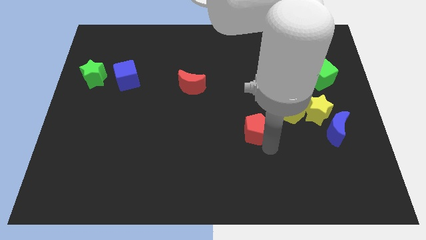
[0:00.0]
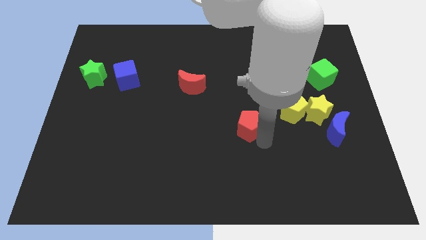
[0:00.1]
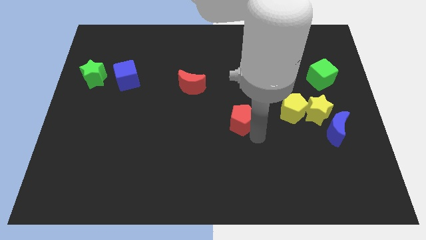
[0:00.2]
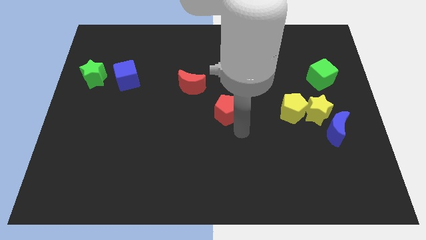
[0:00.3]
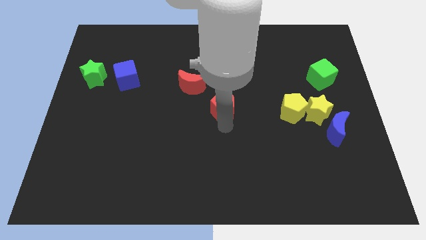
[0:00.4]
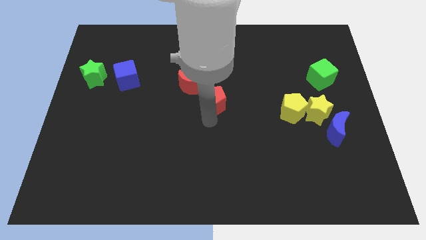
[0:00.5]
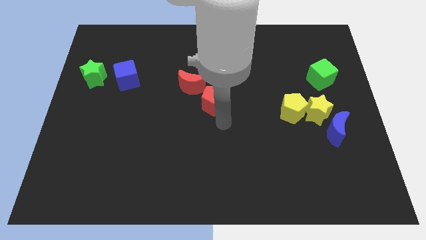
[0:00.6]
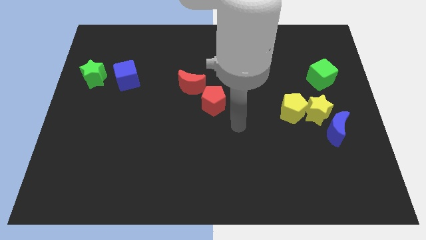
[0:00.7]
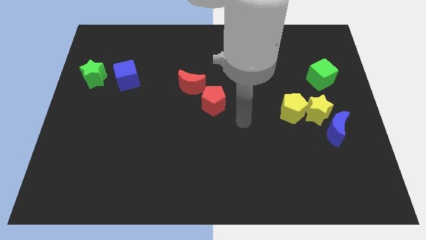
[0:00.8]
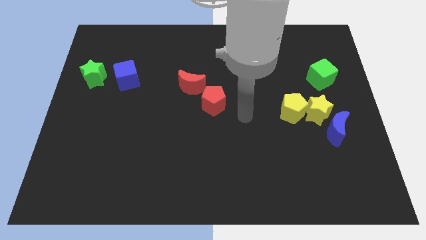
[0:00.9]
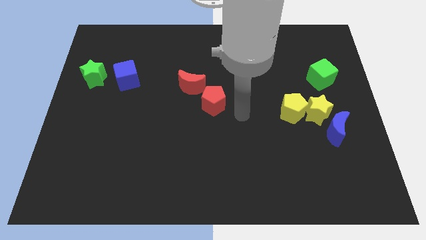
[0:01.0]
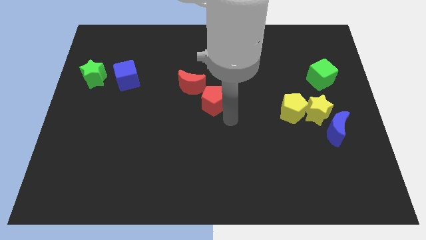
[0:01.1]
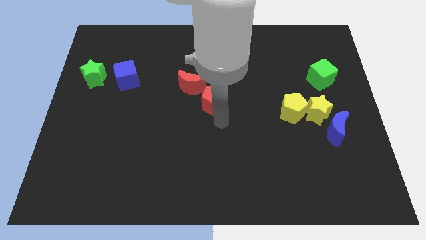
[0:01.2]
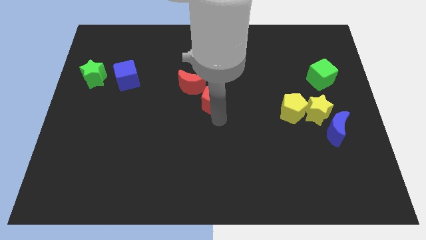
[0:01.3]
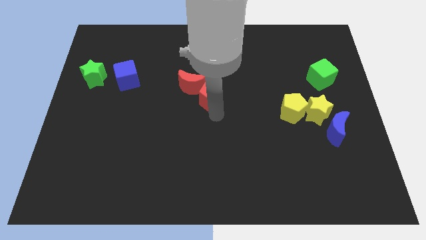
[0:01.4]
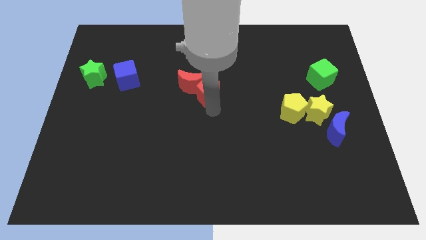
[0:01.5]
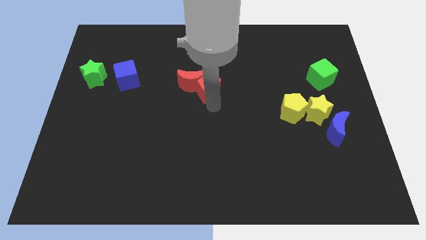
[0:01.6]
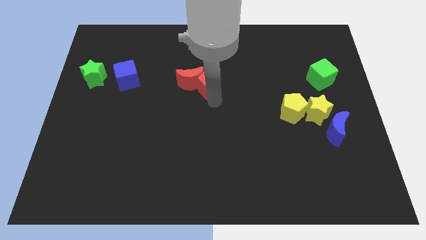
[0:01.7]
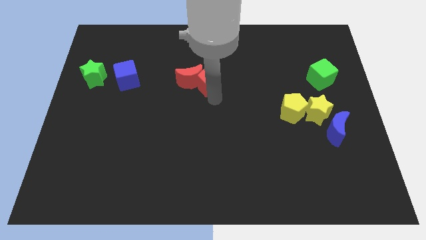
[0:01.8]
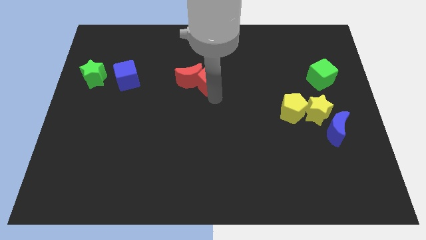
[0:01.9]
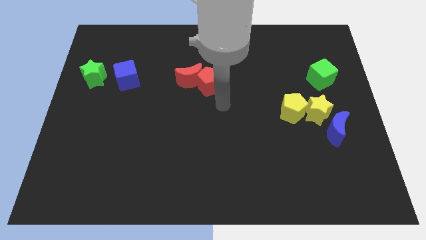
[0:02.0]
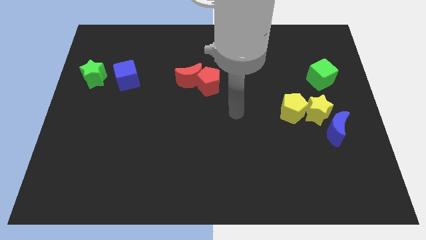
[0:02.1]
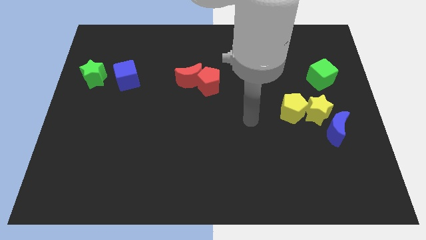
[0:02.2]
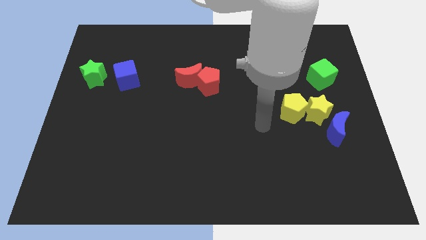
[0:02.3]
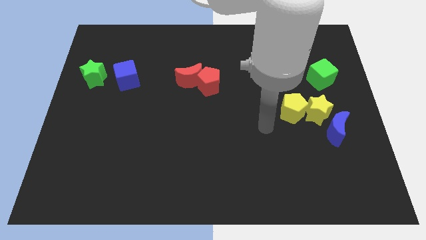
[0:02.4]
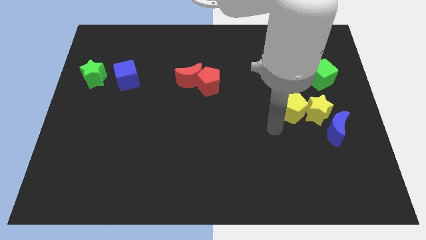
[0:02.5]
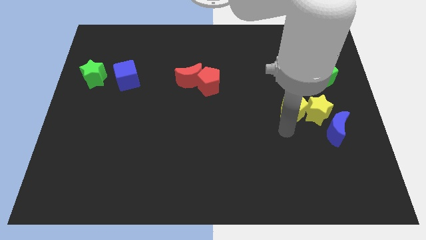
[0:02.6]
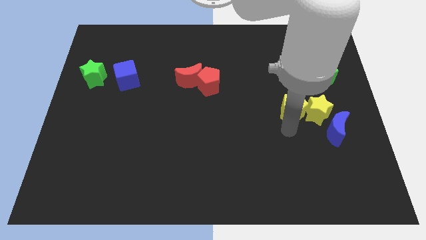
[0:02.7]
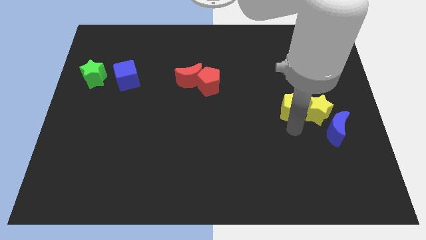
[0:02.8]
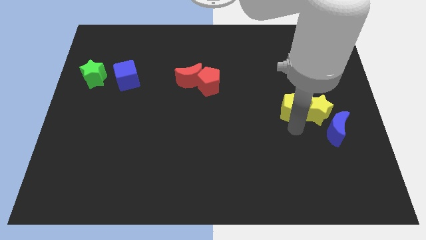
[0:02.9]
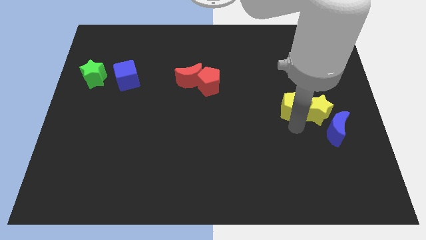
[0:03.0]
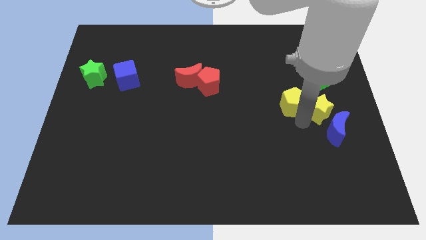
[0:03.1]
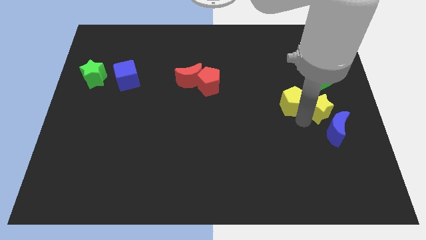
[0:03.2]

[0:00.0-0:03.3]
drag the red pentagon towards the red crescent

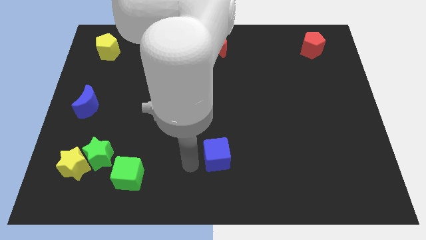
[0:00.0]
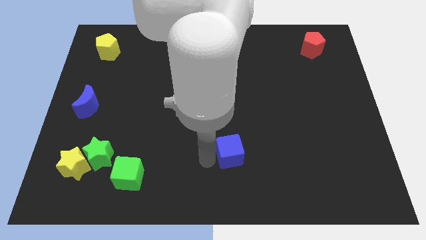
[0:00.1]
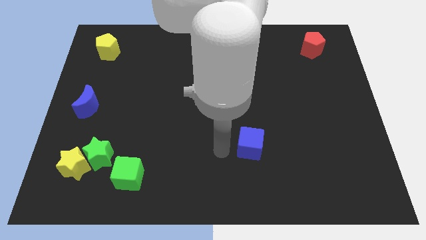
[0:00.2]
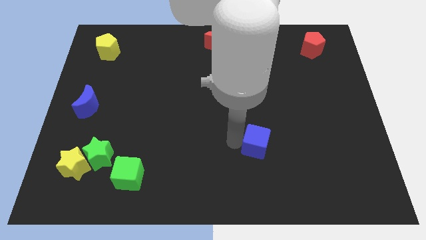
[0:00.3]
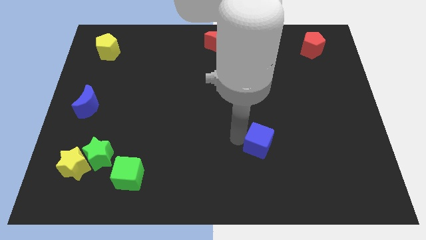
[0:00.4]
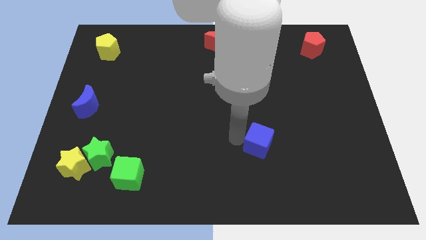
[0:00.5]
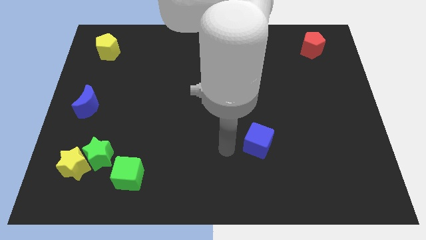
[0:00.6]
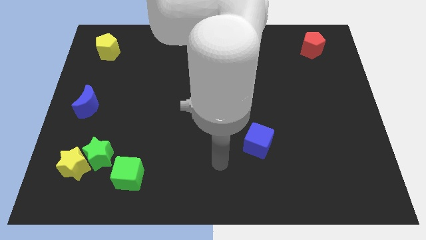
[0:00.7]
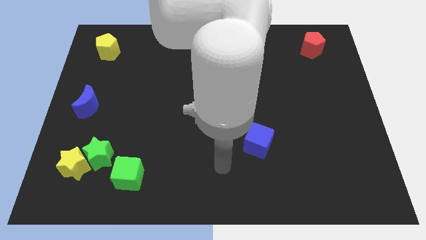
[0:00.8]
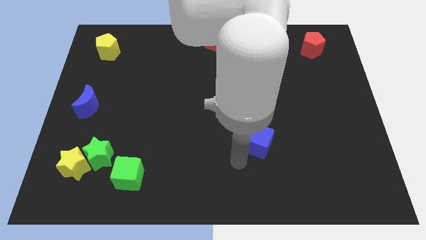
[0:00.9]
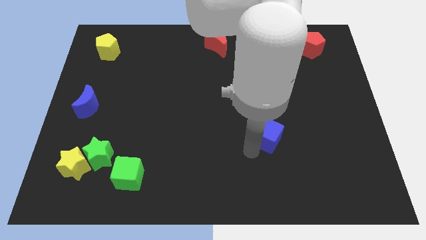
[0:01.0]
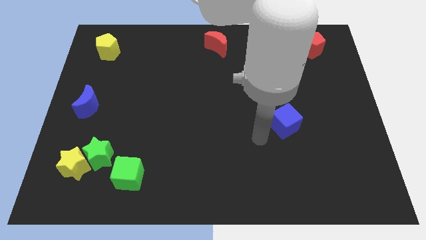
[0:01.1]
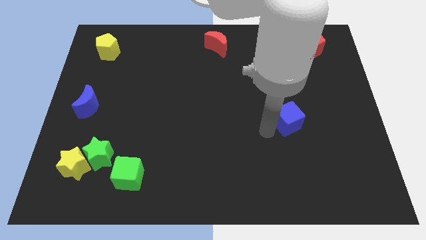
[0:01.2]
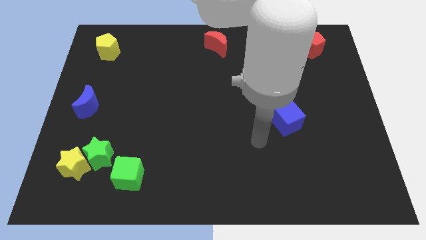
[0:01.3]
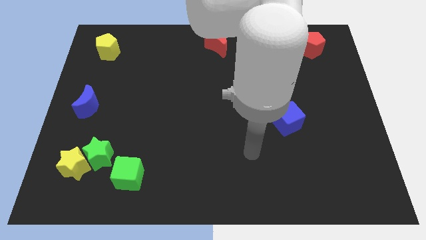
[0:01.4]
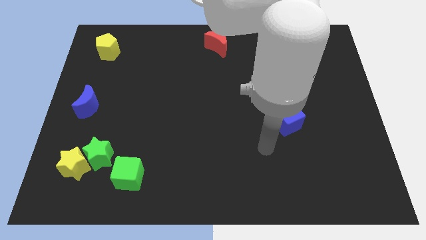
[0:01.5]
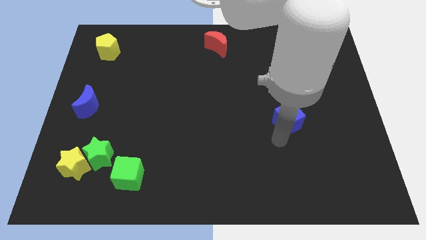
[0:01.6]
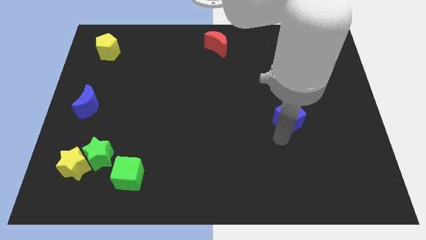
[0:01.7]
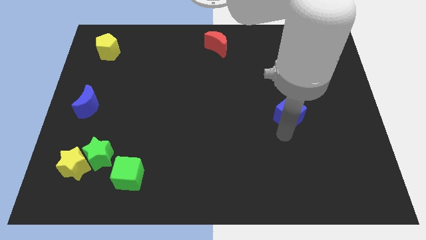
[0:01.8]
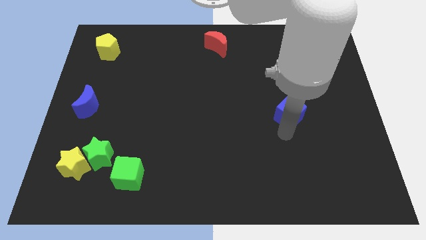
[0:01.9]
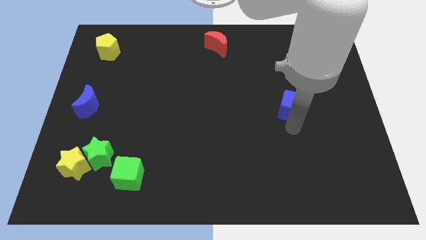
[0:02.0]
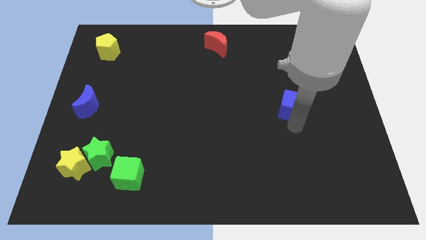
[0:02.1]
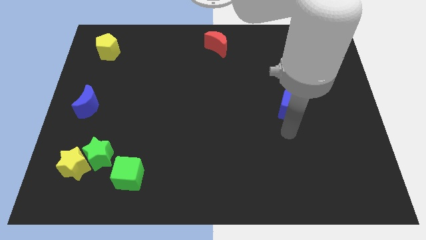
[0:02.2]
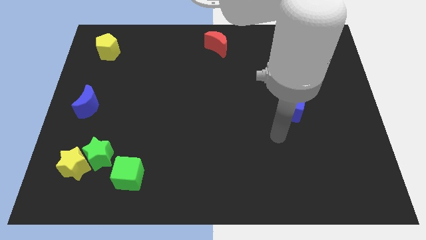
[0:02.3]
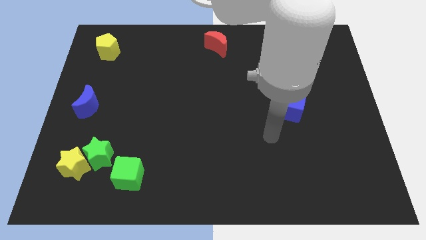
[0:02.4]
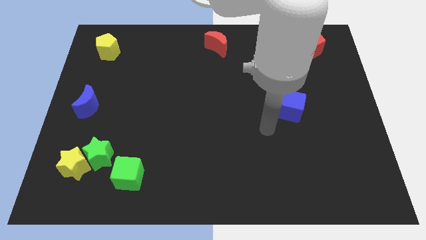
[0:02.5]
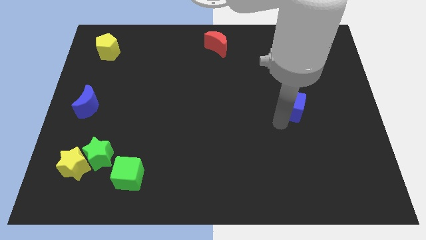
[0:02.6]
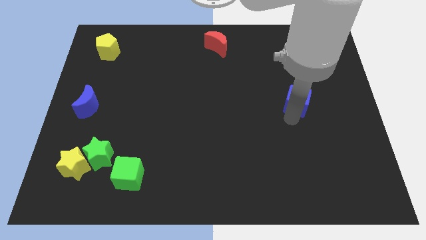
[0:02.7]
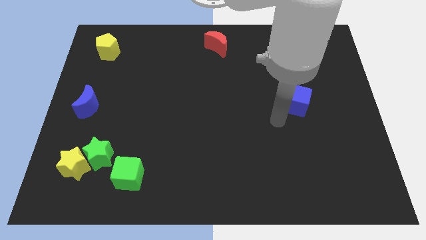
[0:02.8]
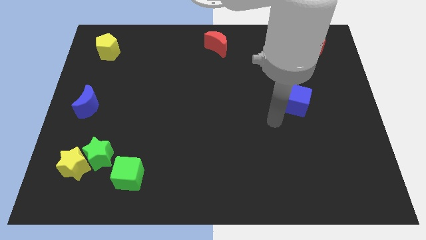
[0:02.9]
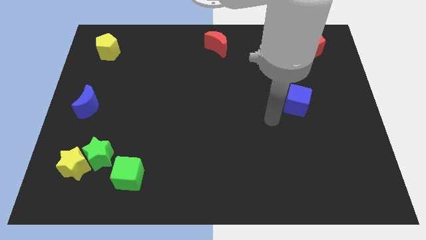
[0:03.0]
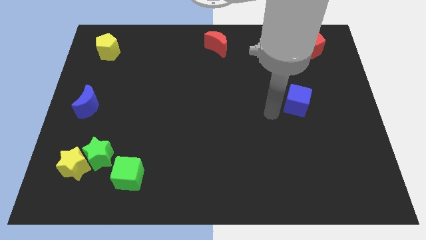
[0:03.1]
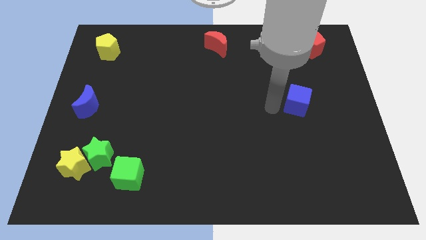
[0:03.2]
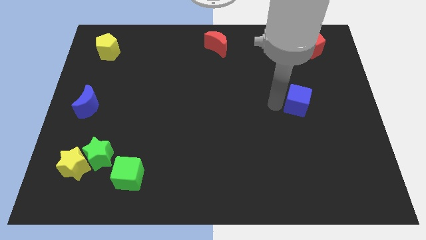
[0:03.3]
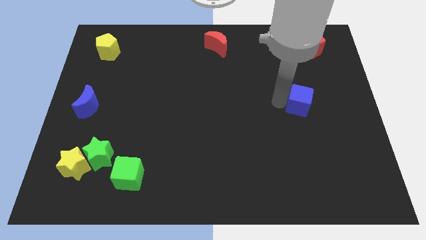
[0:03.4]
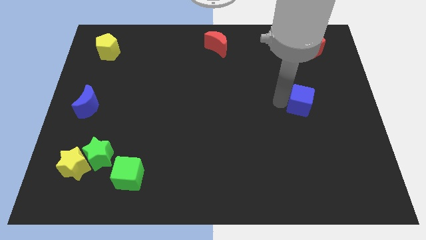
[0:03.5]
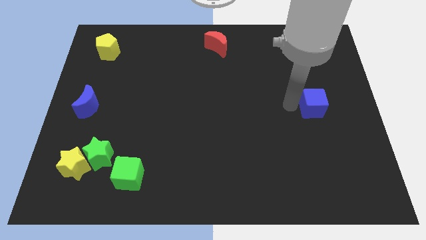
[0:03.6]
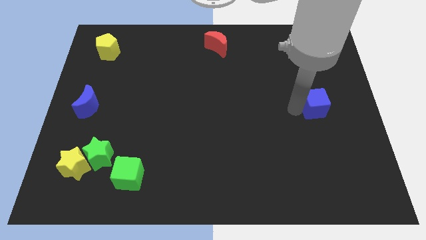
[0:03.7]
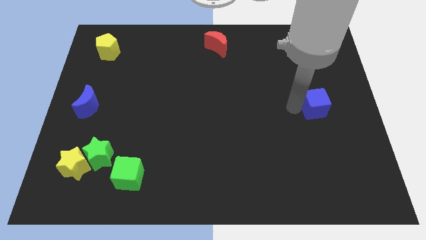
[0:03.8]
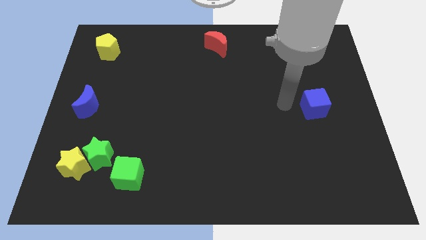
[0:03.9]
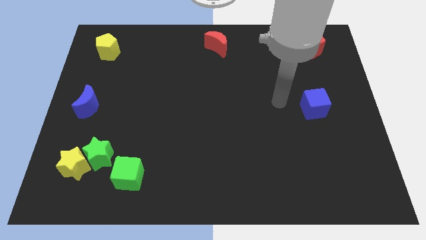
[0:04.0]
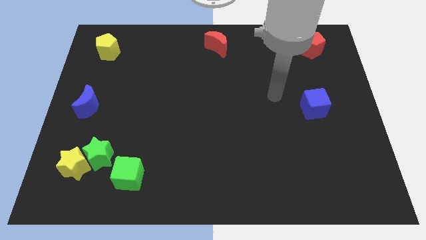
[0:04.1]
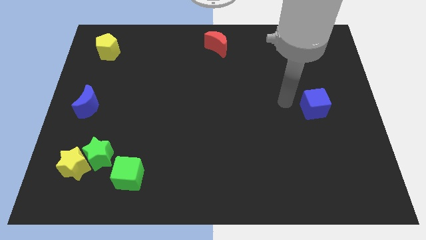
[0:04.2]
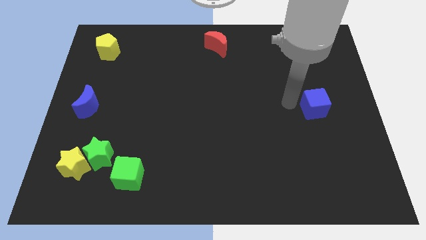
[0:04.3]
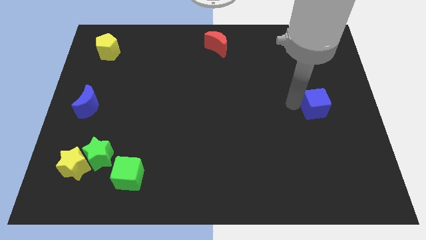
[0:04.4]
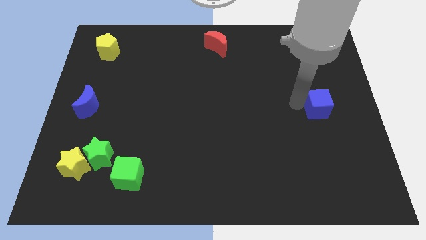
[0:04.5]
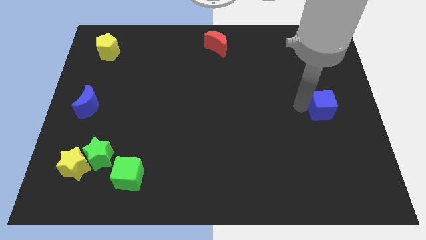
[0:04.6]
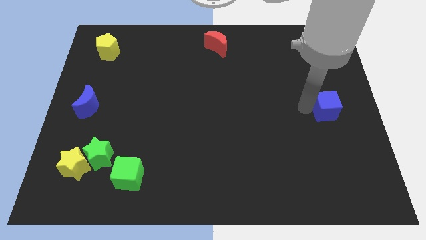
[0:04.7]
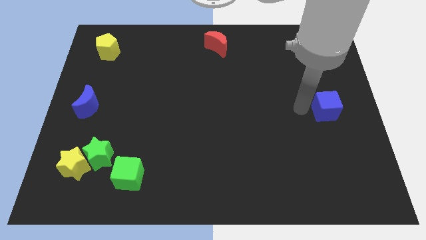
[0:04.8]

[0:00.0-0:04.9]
move the blue cube to the right center of the board

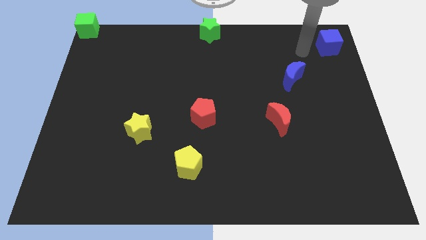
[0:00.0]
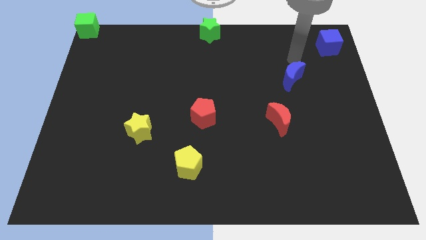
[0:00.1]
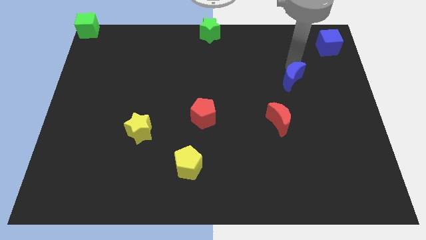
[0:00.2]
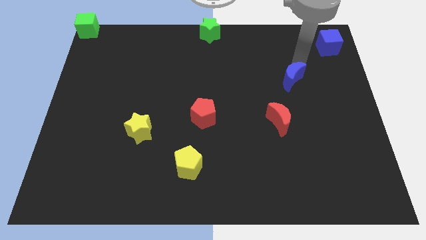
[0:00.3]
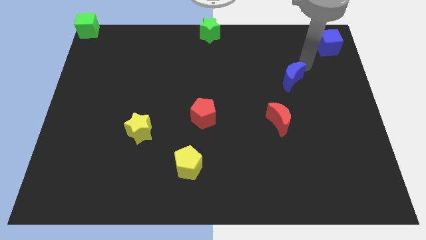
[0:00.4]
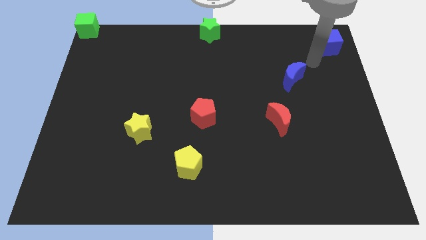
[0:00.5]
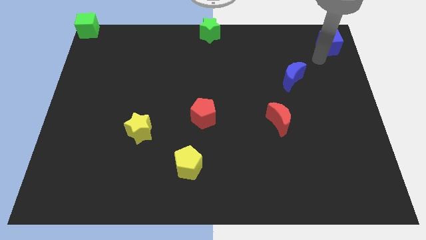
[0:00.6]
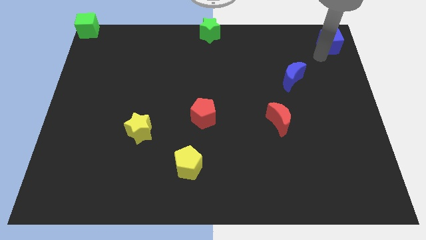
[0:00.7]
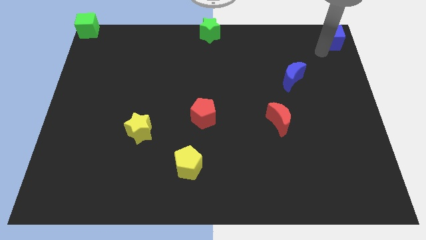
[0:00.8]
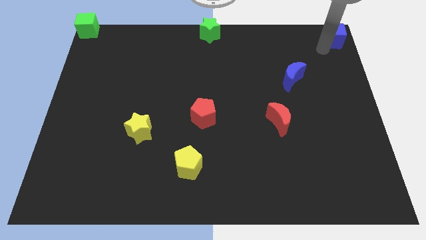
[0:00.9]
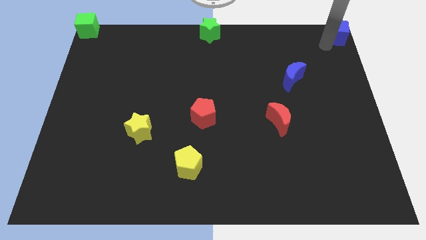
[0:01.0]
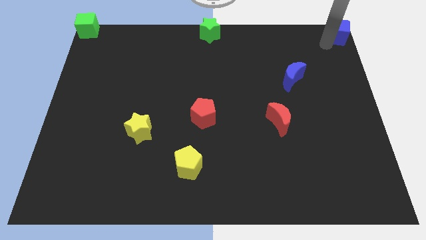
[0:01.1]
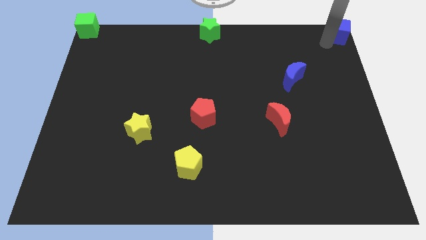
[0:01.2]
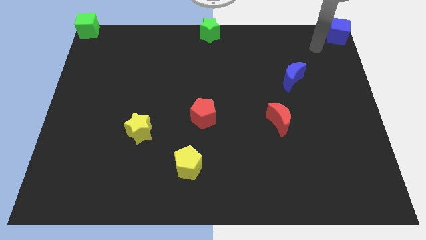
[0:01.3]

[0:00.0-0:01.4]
move the blue cube to the top right corner of the board
